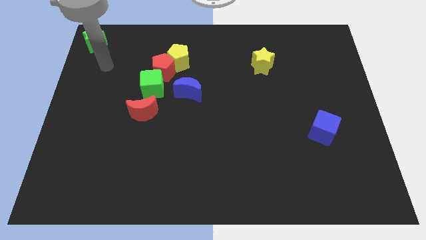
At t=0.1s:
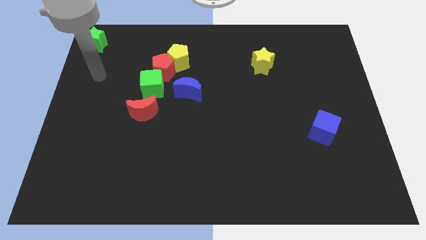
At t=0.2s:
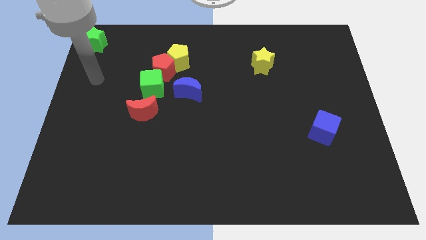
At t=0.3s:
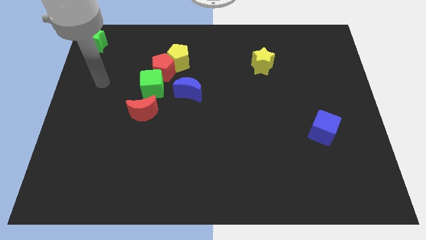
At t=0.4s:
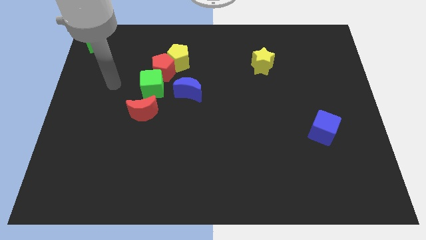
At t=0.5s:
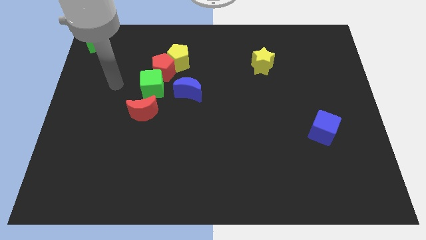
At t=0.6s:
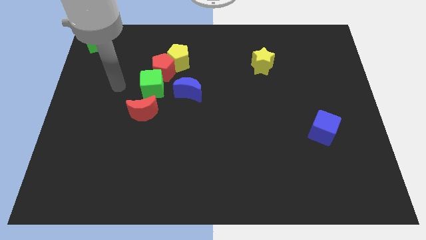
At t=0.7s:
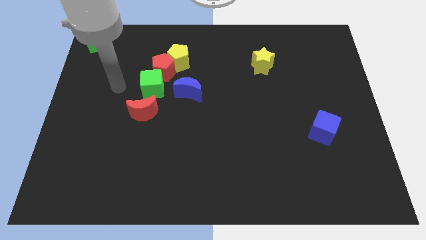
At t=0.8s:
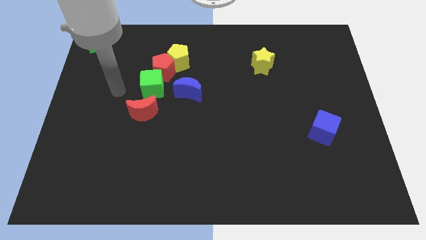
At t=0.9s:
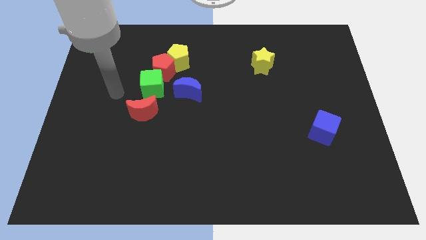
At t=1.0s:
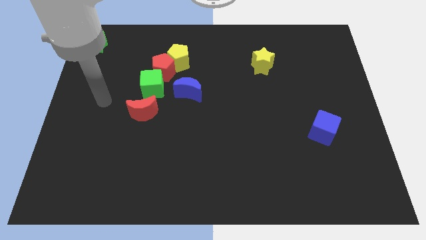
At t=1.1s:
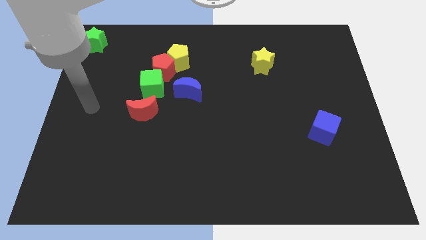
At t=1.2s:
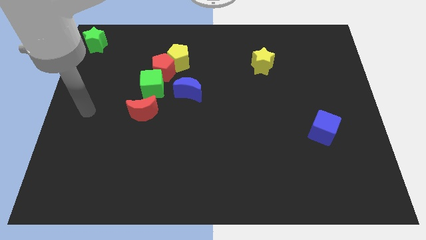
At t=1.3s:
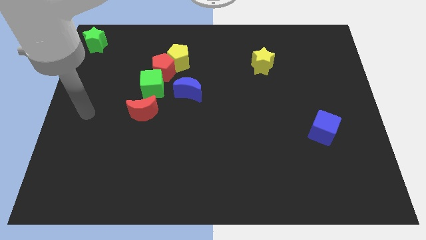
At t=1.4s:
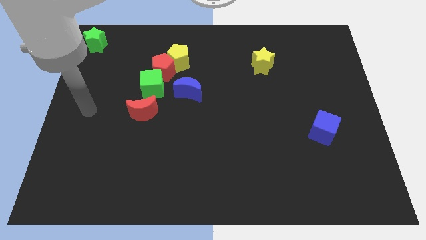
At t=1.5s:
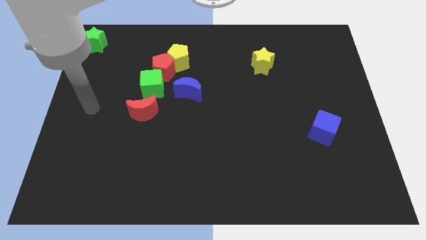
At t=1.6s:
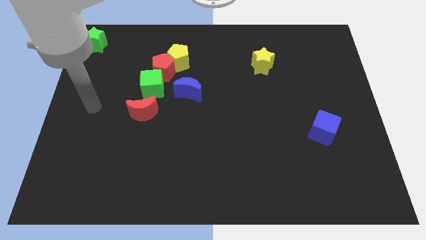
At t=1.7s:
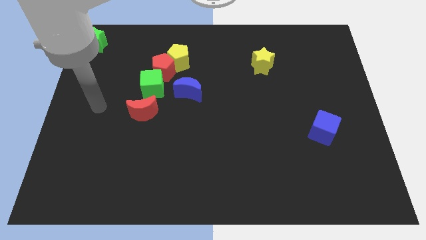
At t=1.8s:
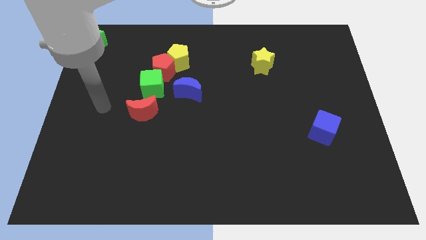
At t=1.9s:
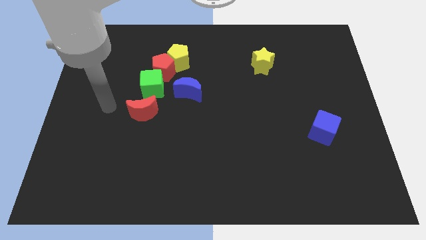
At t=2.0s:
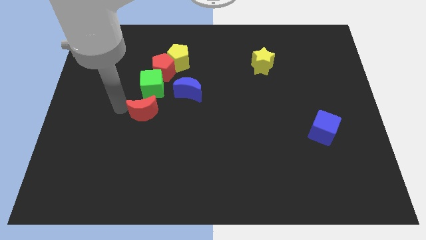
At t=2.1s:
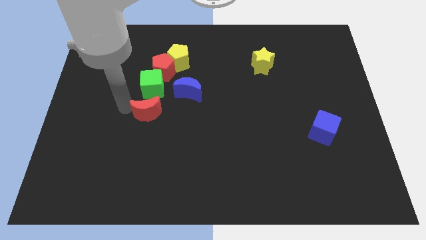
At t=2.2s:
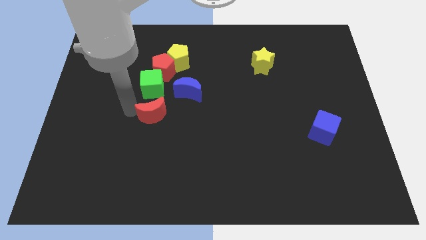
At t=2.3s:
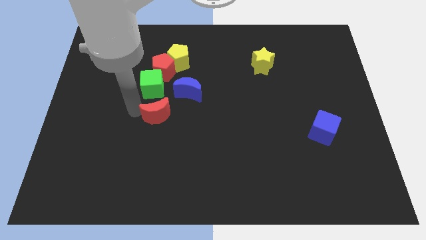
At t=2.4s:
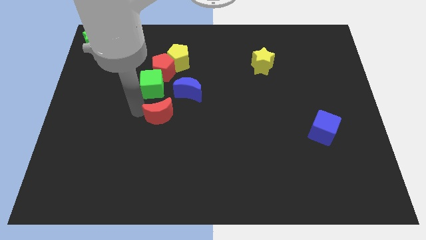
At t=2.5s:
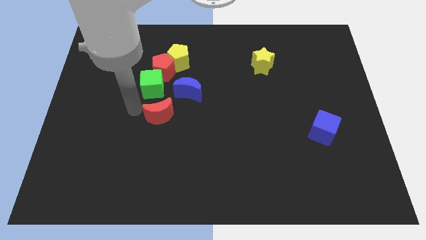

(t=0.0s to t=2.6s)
slightly push the red crescent towards the center of the board

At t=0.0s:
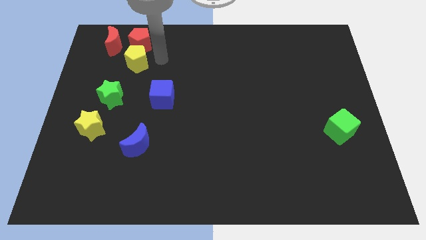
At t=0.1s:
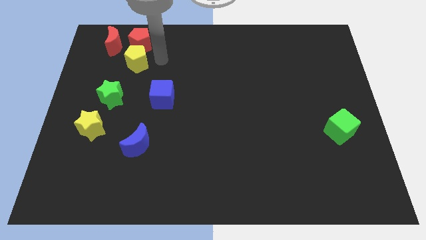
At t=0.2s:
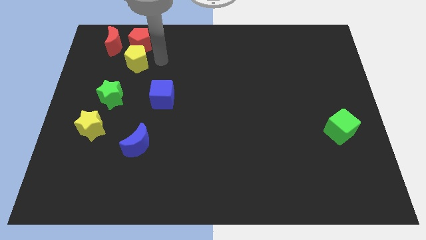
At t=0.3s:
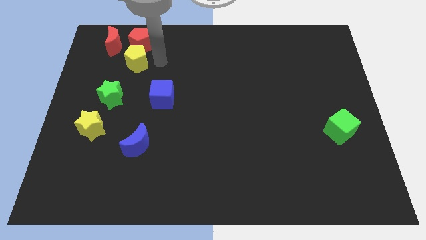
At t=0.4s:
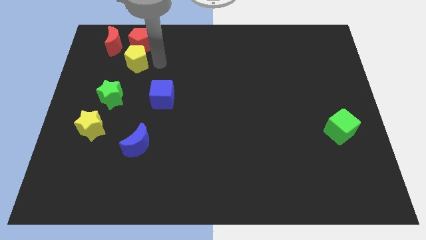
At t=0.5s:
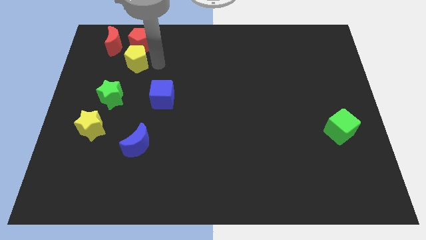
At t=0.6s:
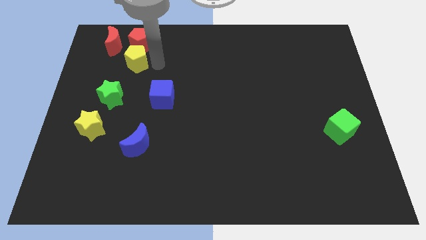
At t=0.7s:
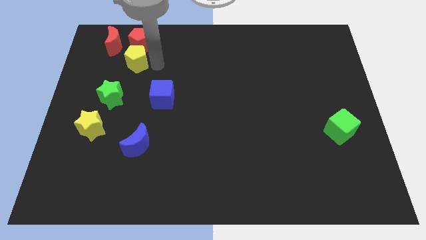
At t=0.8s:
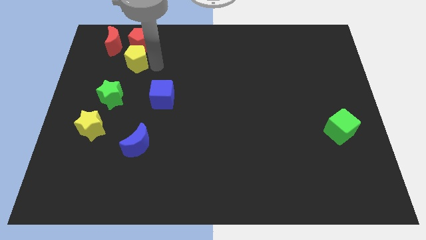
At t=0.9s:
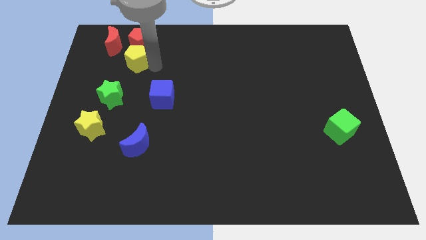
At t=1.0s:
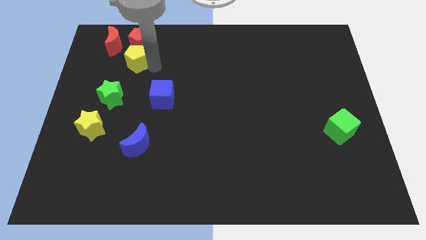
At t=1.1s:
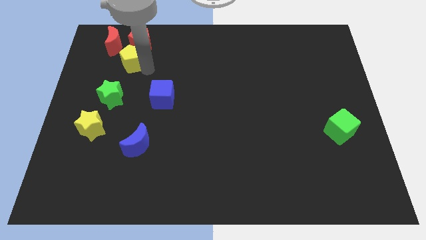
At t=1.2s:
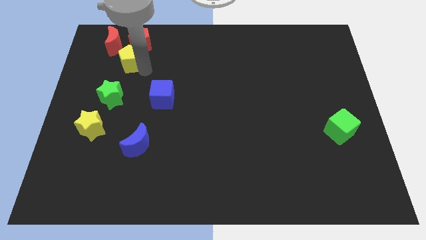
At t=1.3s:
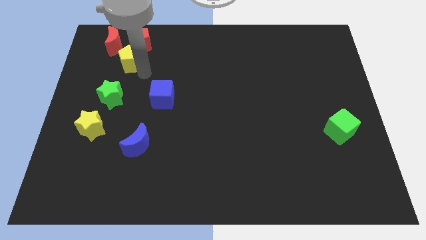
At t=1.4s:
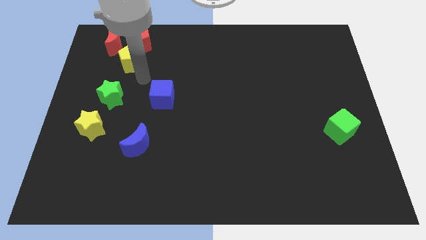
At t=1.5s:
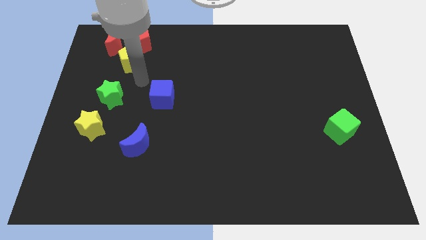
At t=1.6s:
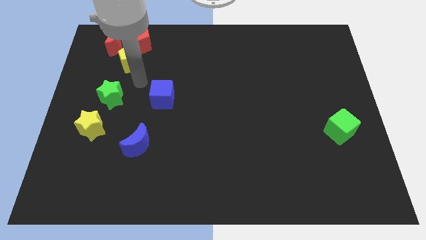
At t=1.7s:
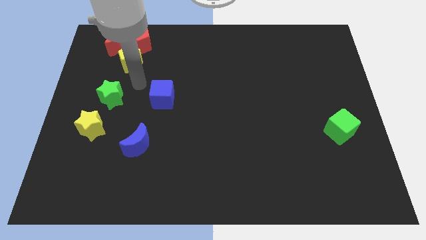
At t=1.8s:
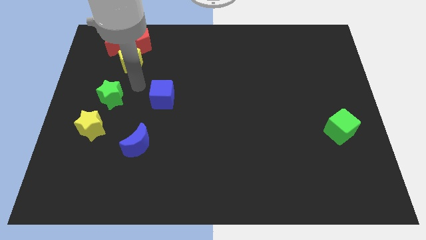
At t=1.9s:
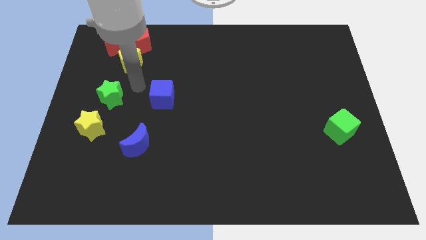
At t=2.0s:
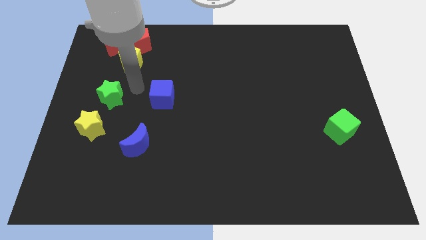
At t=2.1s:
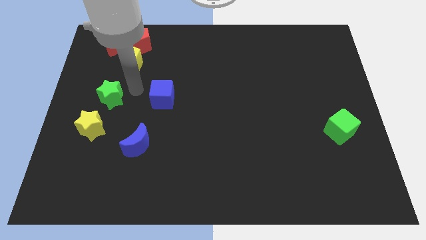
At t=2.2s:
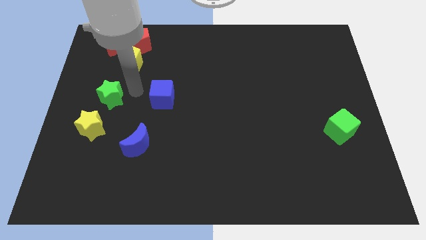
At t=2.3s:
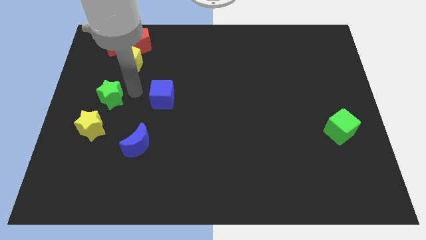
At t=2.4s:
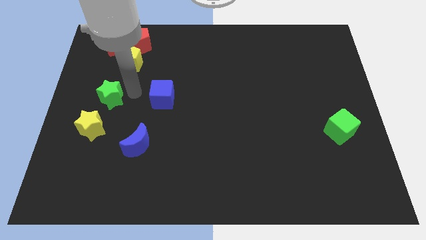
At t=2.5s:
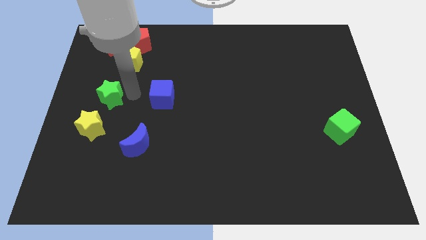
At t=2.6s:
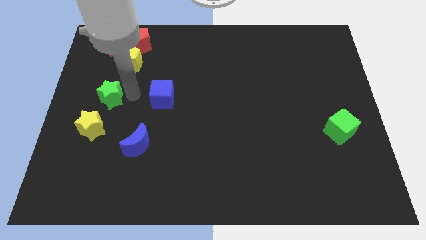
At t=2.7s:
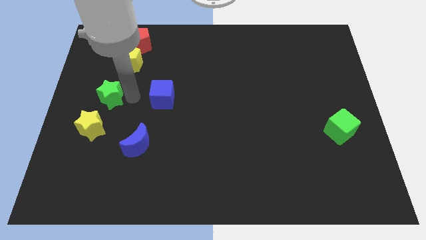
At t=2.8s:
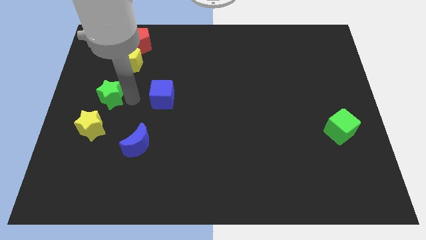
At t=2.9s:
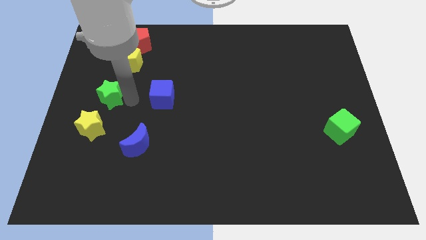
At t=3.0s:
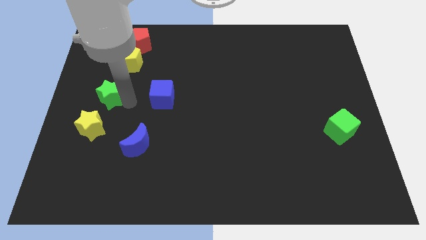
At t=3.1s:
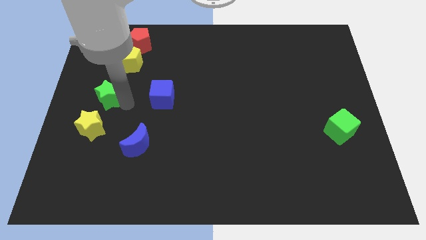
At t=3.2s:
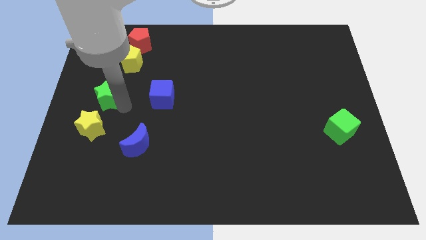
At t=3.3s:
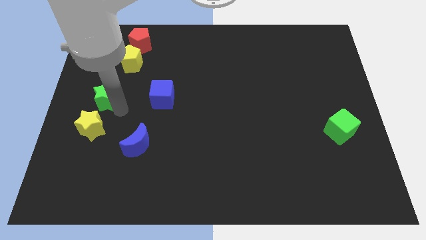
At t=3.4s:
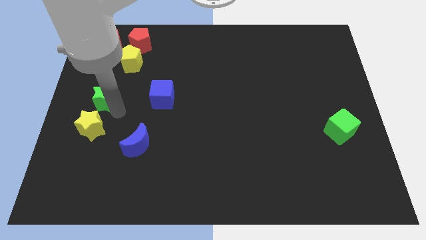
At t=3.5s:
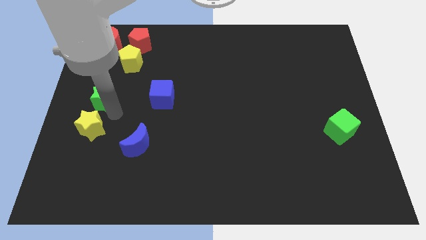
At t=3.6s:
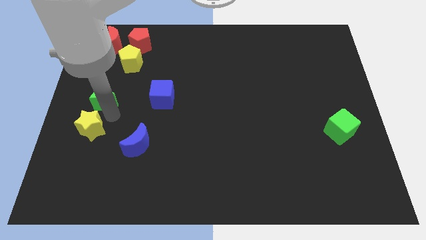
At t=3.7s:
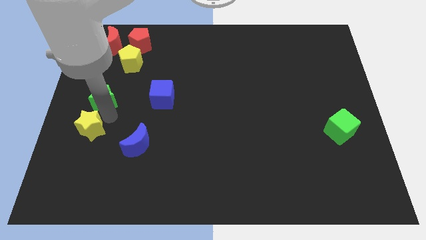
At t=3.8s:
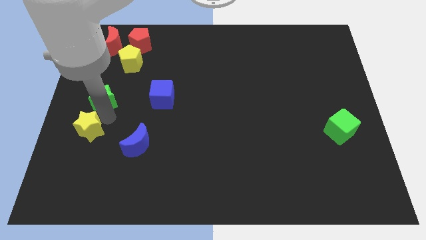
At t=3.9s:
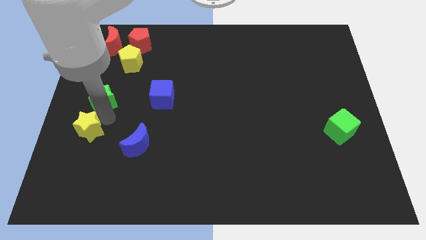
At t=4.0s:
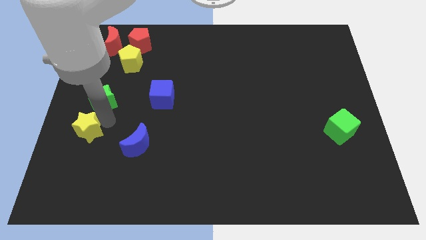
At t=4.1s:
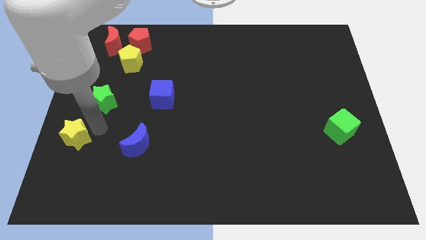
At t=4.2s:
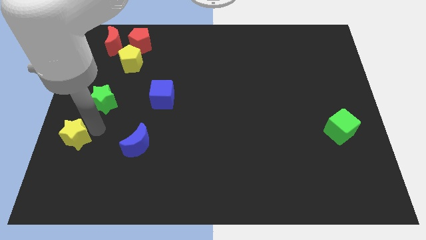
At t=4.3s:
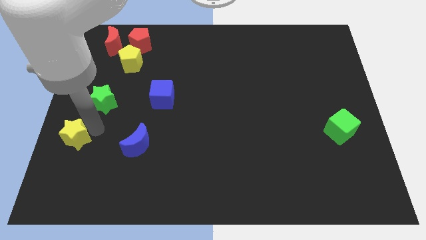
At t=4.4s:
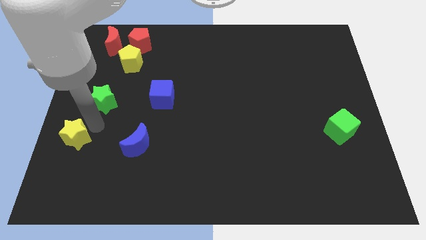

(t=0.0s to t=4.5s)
move your arm in between the green star and the yellow star

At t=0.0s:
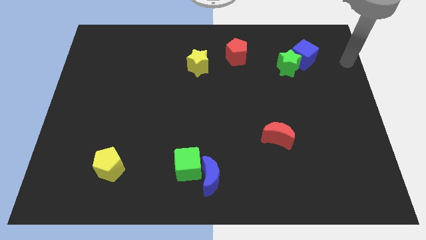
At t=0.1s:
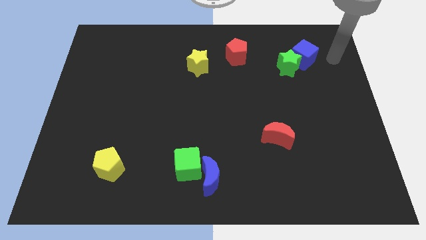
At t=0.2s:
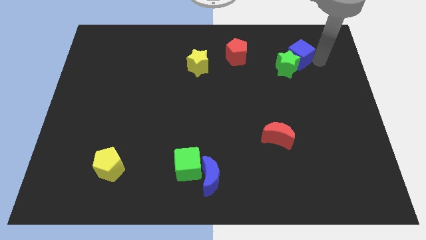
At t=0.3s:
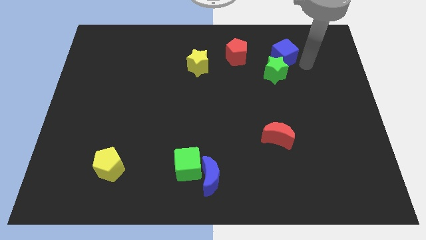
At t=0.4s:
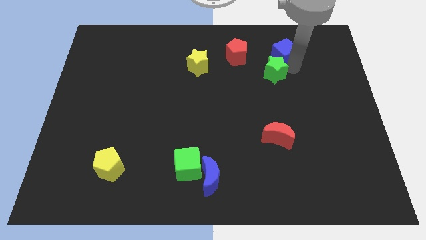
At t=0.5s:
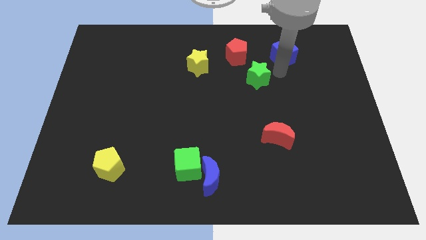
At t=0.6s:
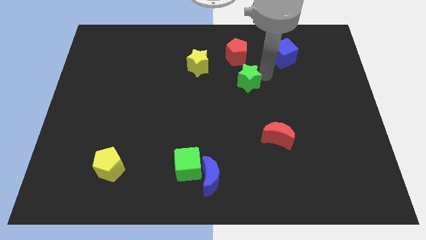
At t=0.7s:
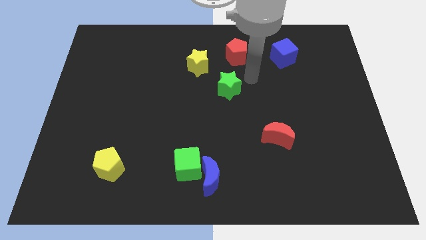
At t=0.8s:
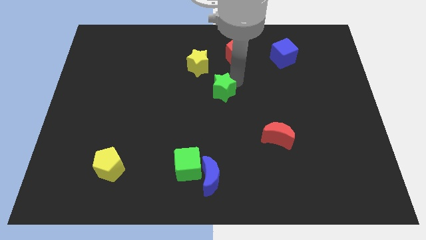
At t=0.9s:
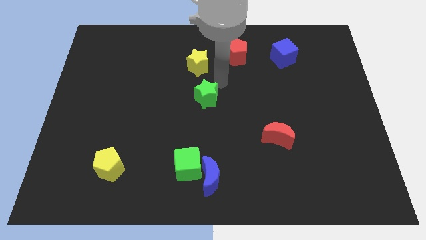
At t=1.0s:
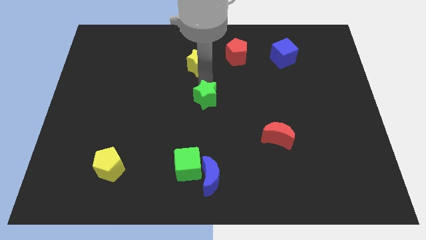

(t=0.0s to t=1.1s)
separate the green star from blue cube

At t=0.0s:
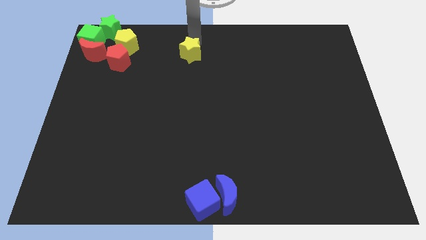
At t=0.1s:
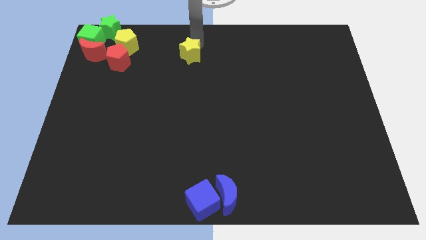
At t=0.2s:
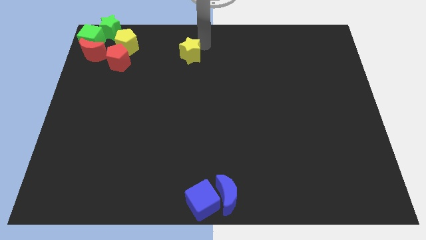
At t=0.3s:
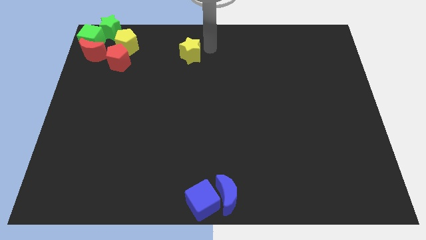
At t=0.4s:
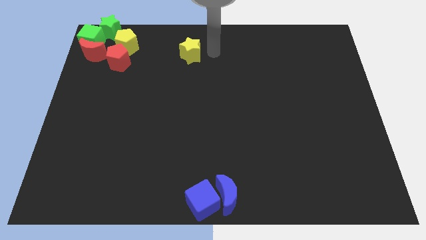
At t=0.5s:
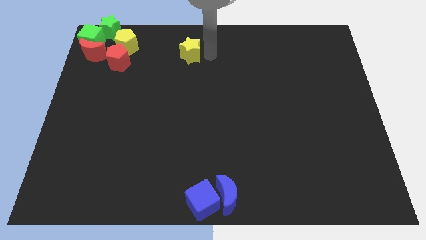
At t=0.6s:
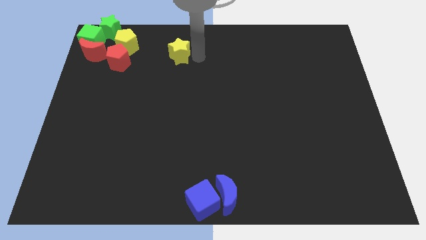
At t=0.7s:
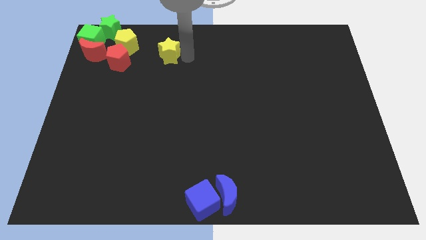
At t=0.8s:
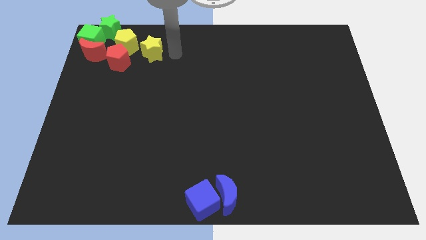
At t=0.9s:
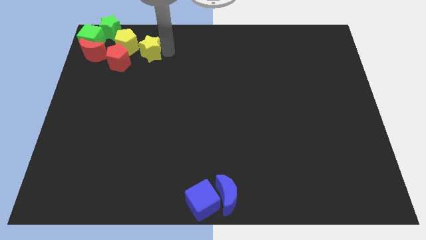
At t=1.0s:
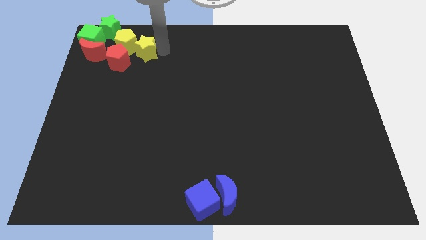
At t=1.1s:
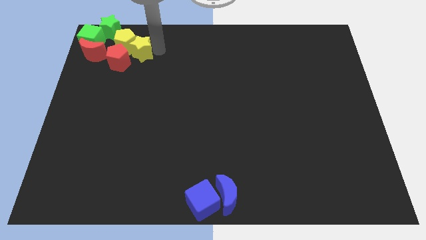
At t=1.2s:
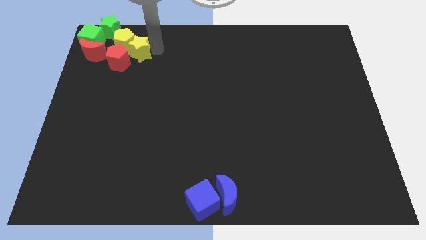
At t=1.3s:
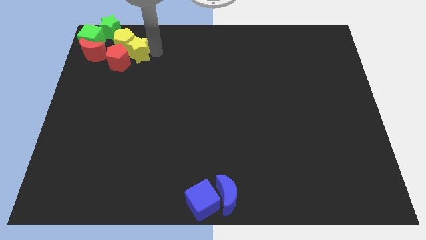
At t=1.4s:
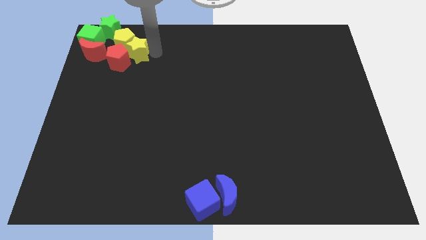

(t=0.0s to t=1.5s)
move the yellow star into the red pentagon and yellow pentagon
